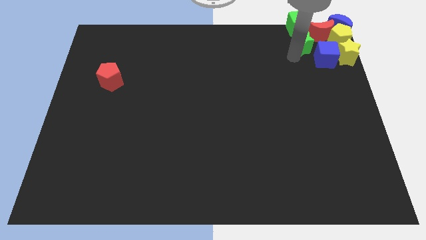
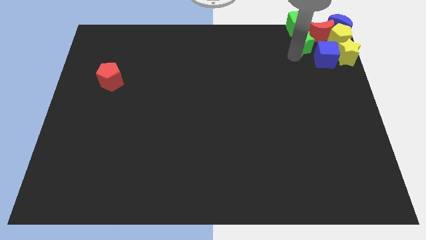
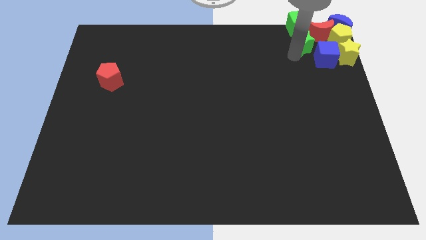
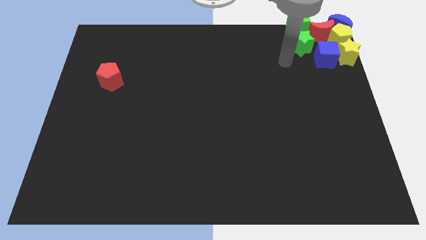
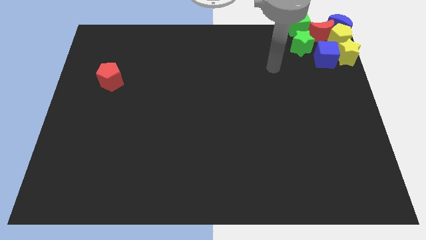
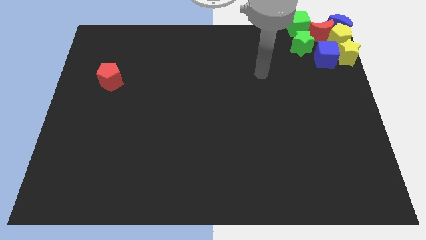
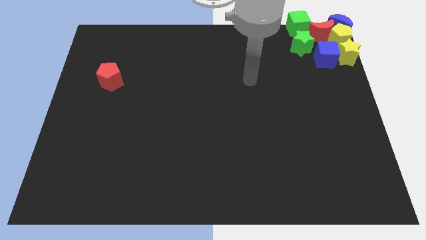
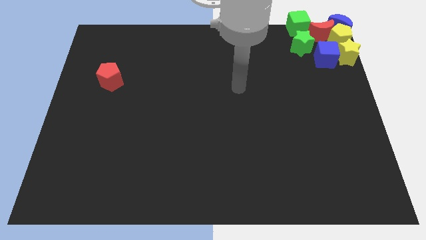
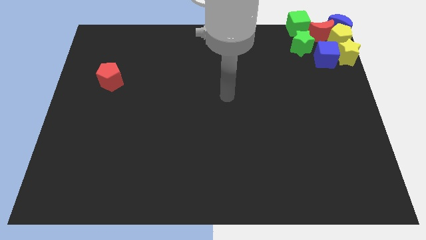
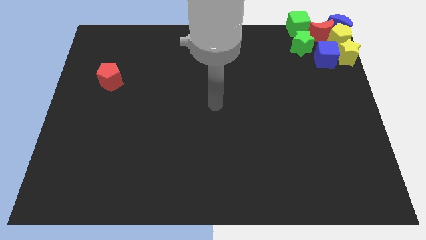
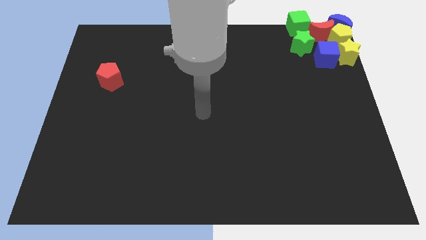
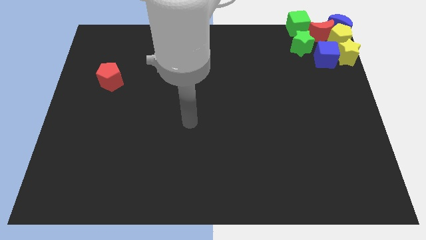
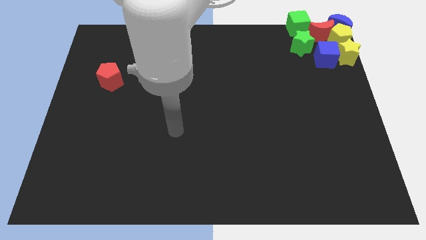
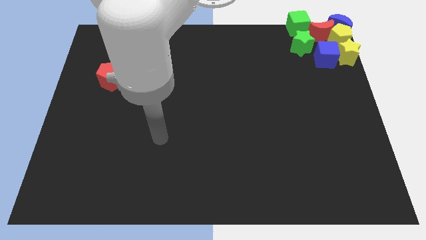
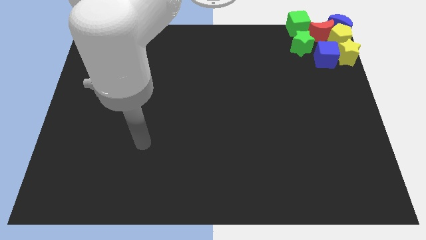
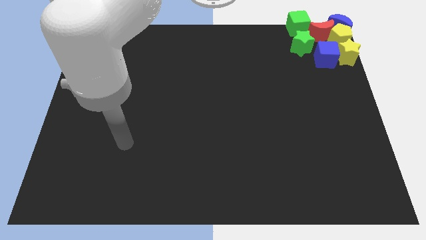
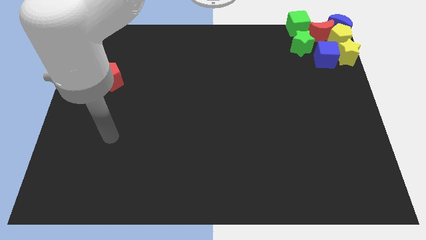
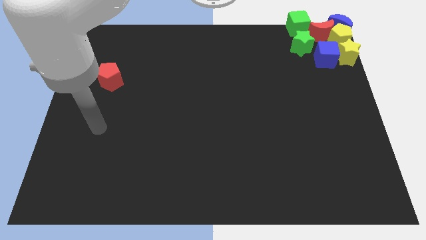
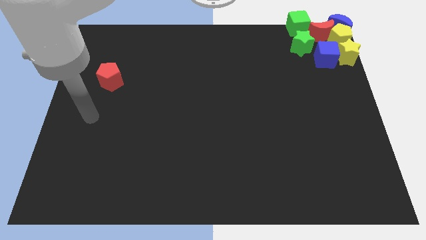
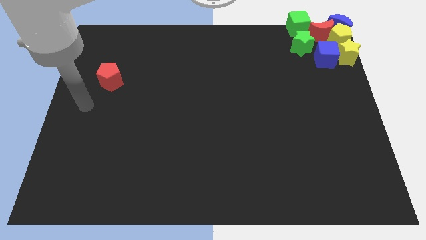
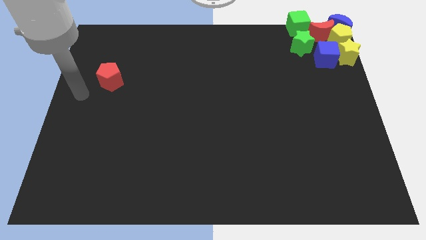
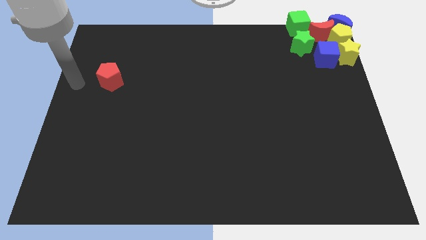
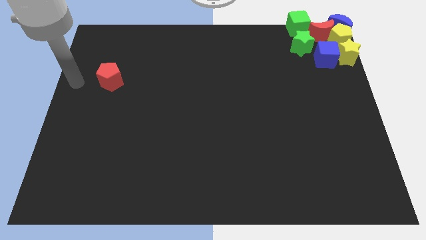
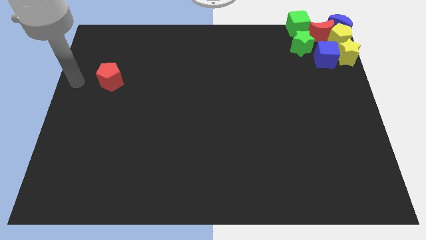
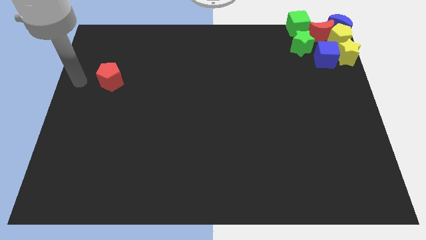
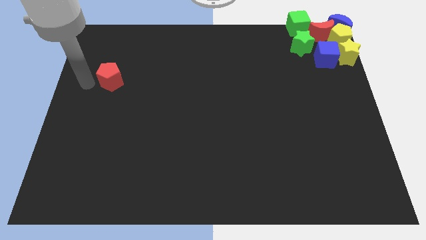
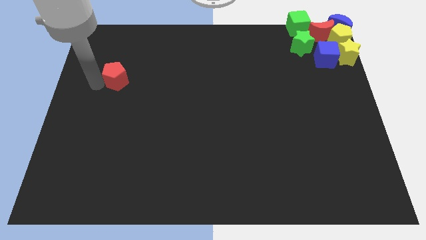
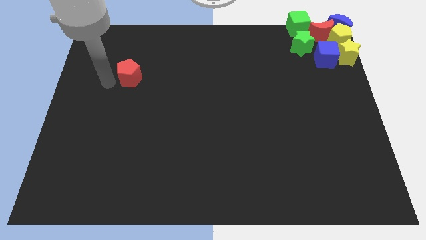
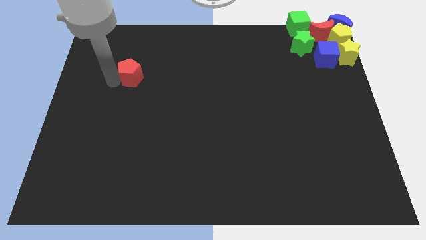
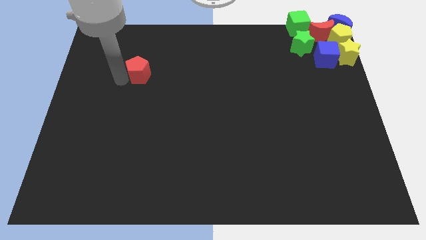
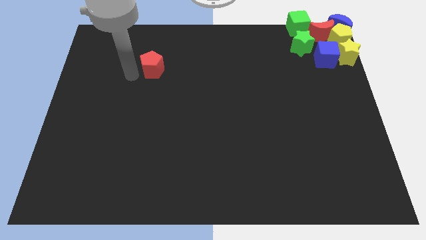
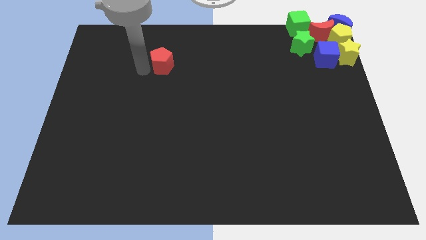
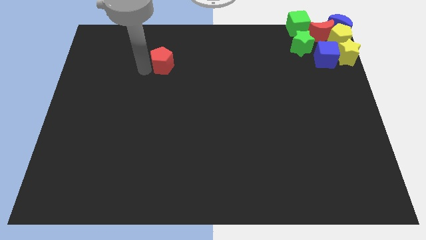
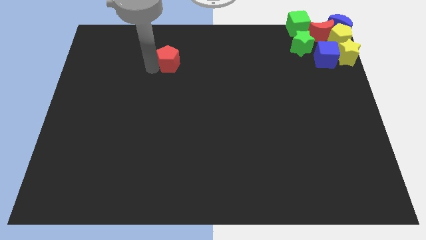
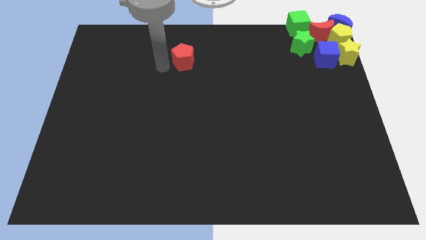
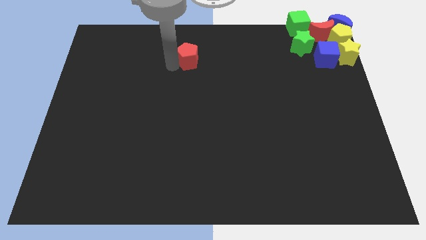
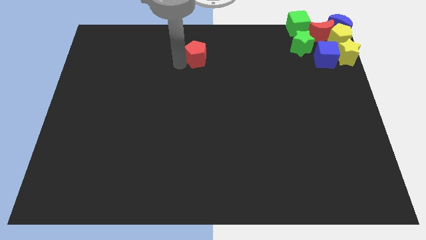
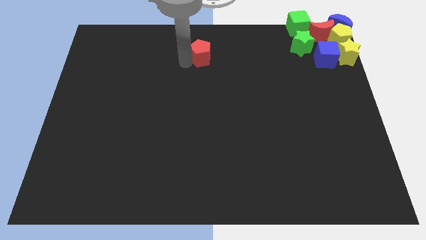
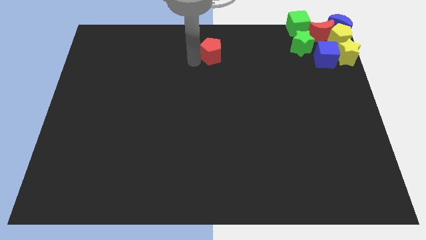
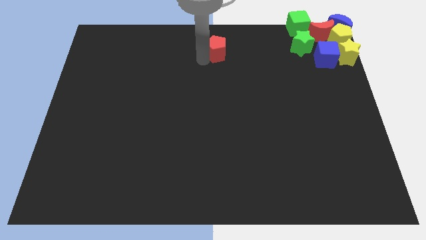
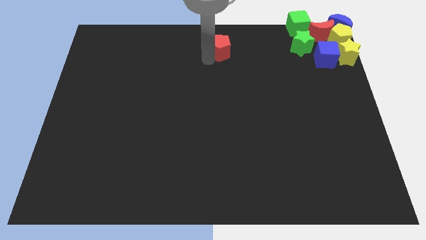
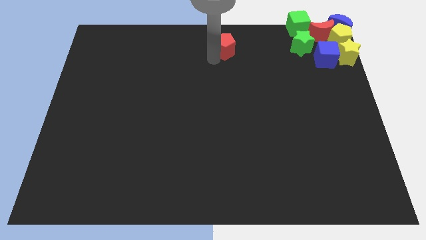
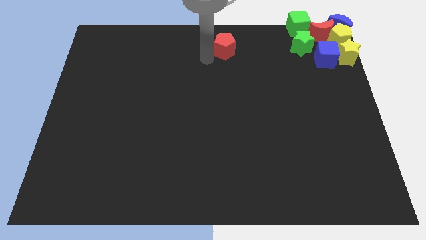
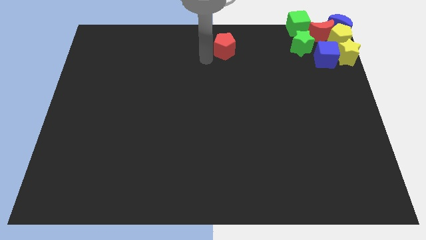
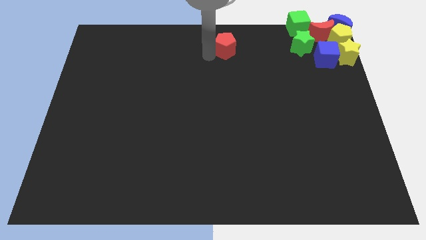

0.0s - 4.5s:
move the red pentagon towards the center top of the board

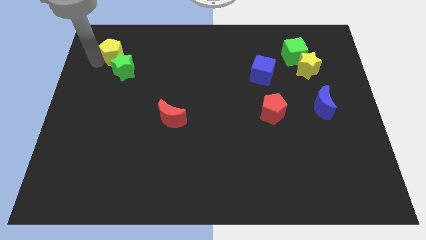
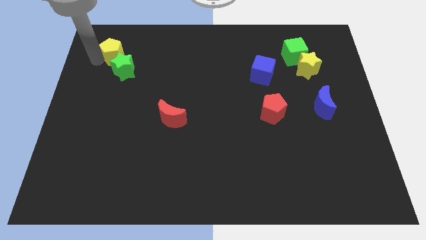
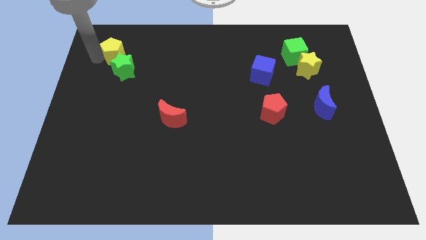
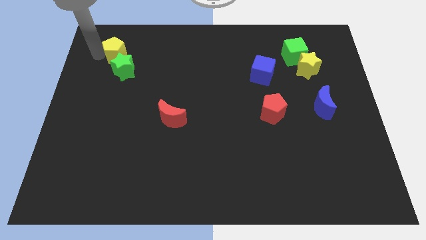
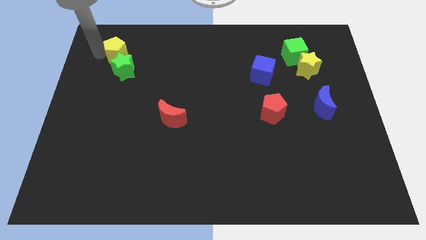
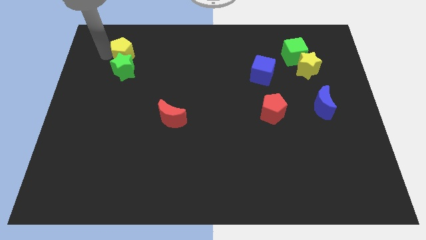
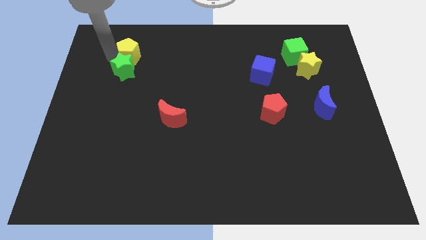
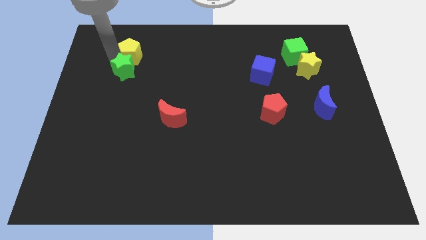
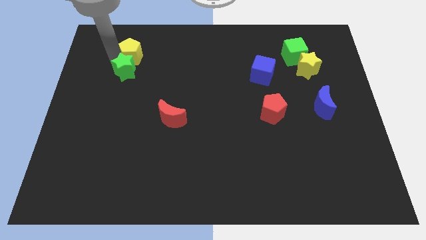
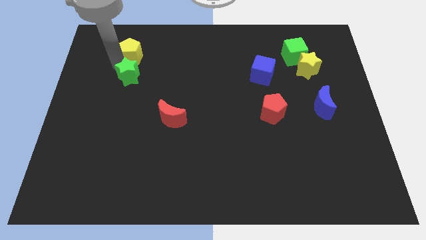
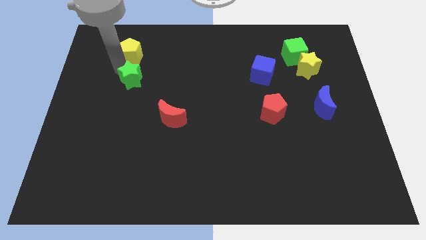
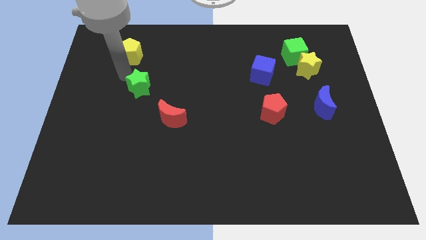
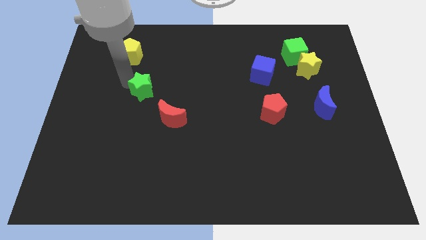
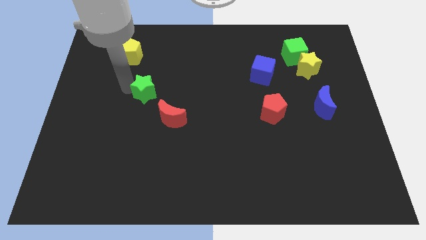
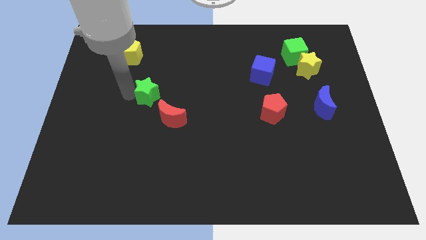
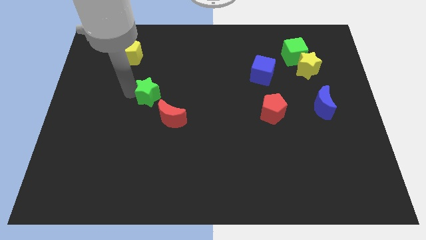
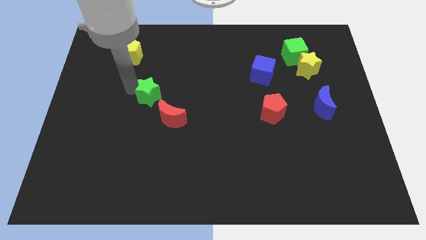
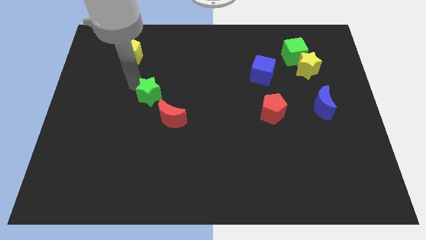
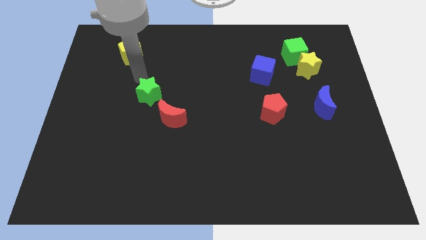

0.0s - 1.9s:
separate the green star from the yellow pentagon

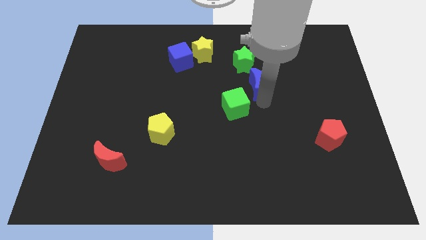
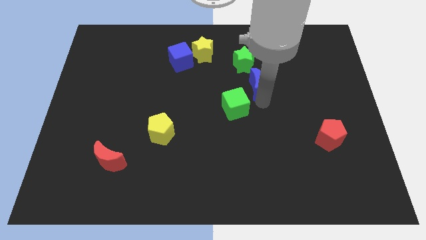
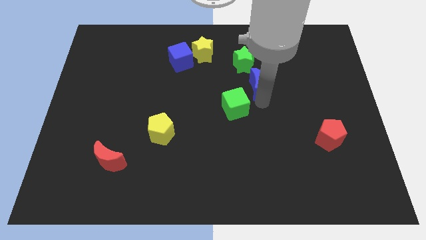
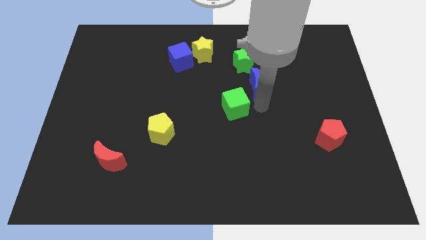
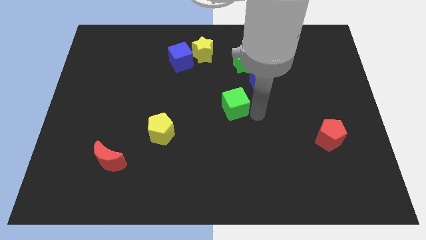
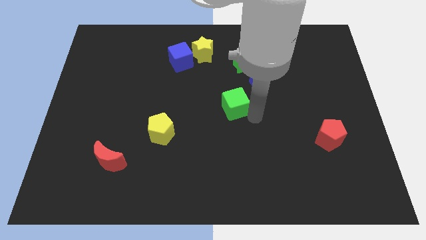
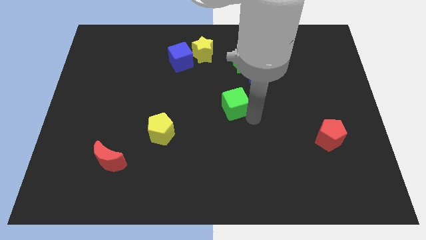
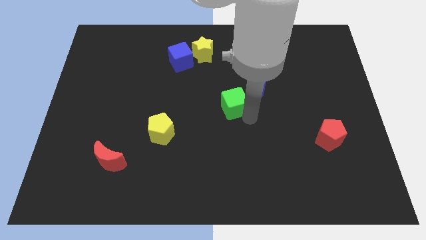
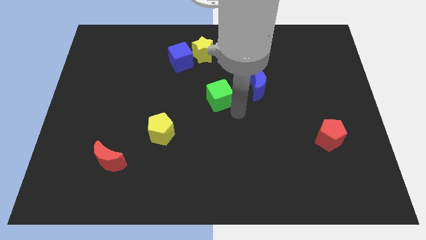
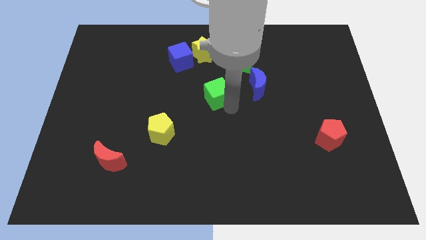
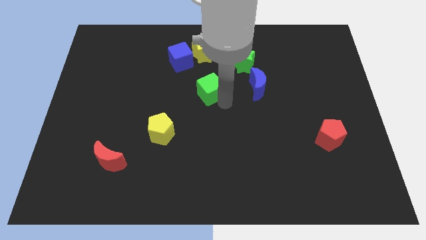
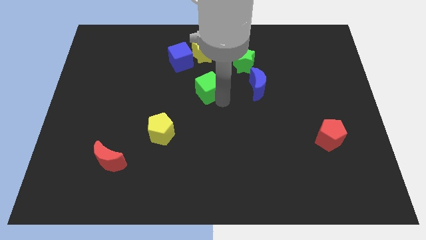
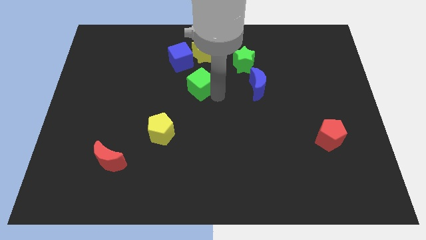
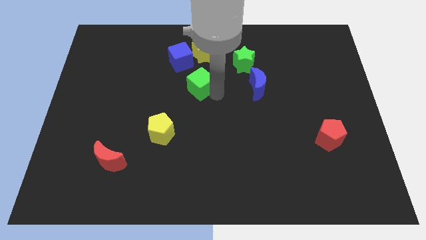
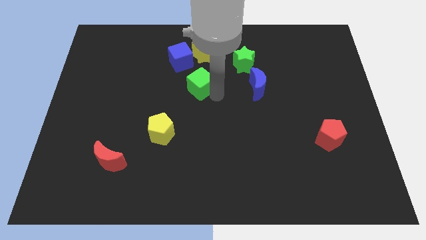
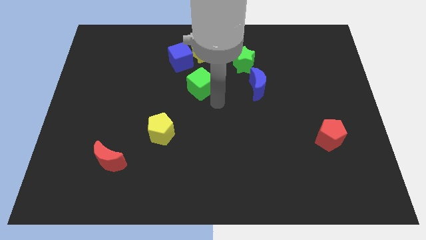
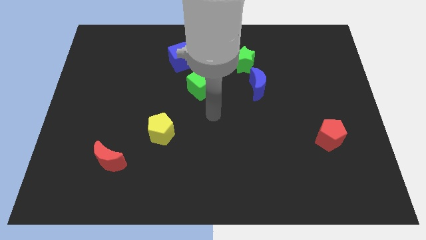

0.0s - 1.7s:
place green cube to the left of blue moon

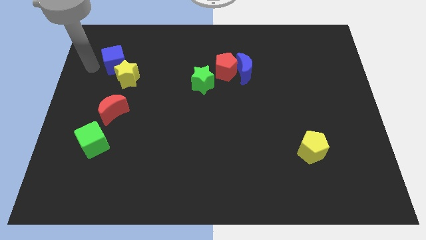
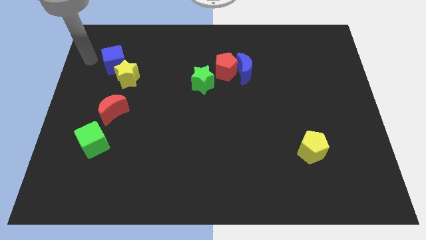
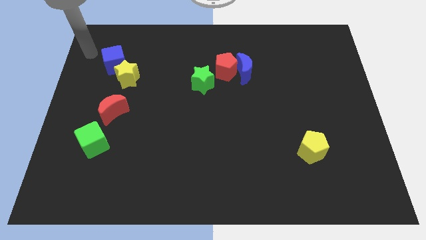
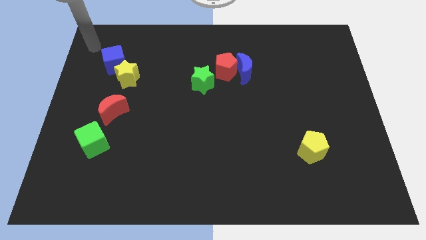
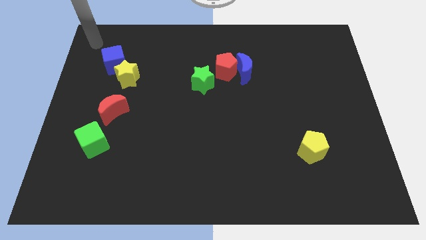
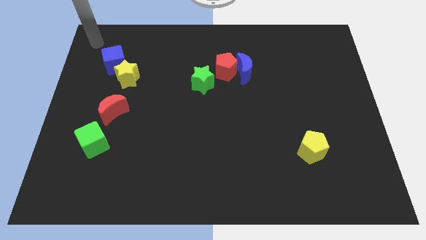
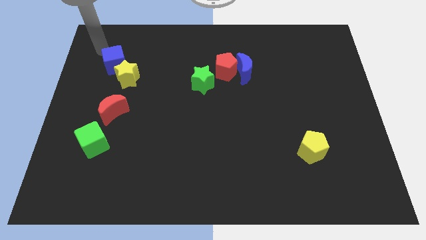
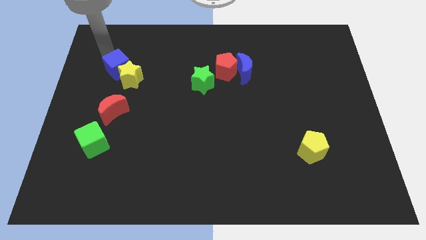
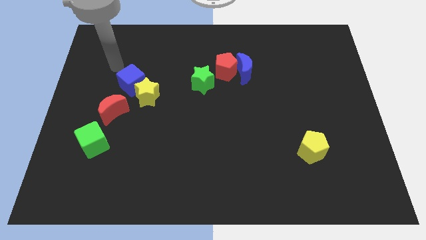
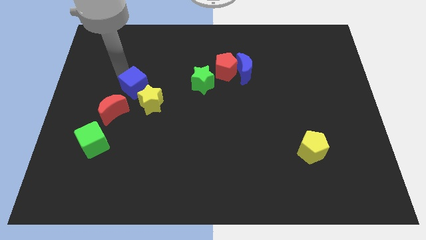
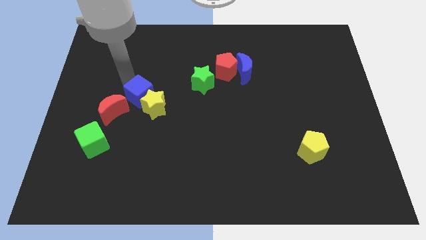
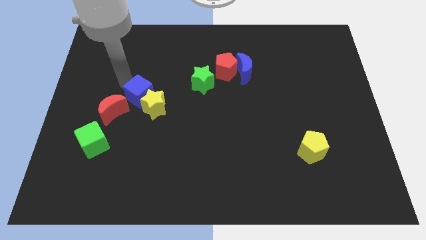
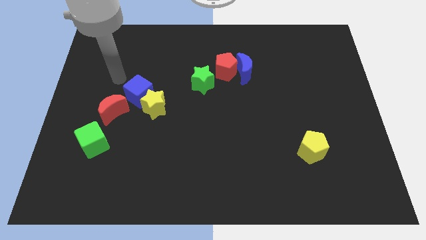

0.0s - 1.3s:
move the blue cube towards the top right of the red moon
